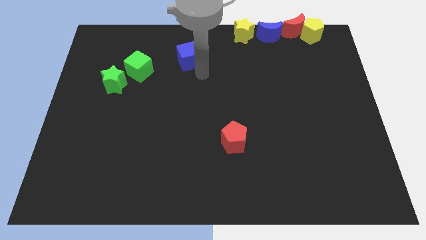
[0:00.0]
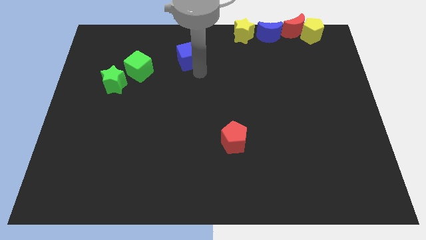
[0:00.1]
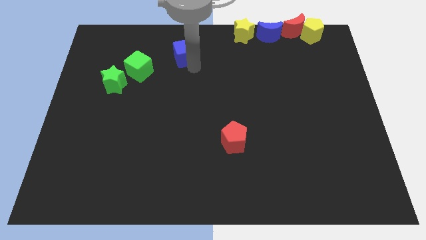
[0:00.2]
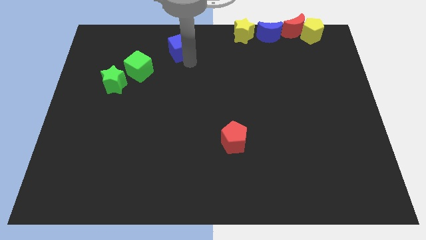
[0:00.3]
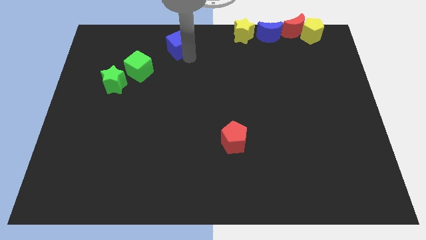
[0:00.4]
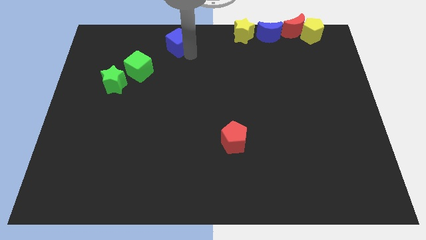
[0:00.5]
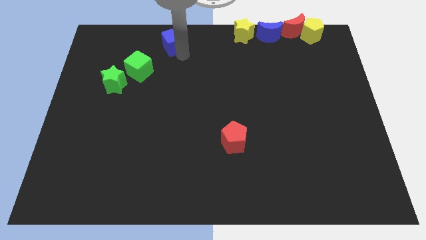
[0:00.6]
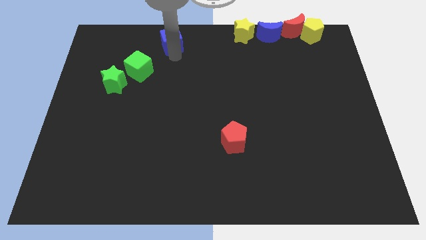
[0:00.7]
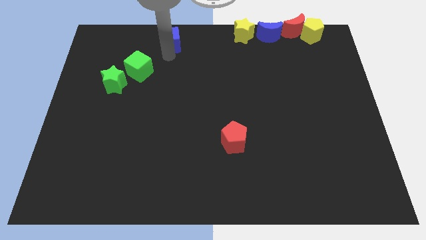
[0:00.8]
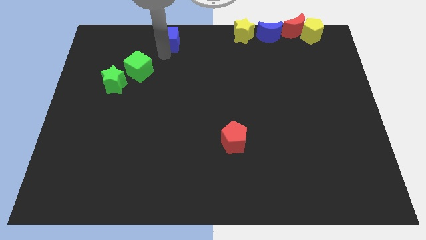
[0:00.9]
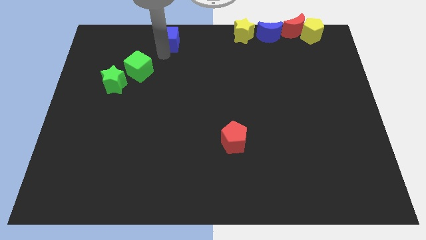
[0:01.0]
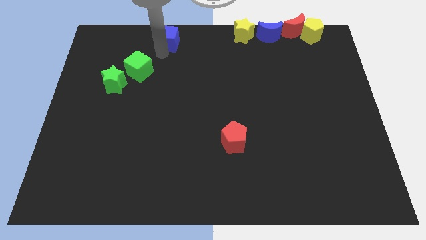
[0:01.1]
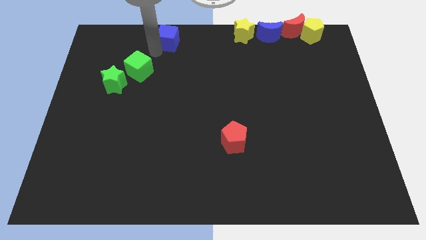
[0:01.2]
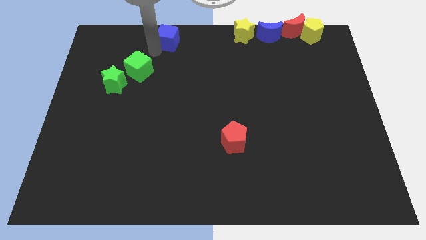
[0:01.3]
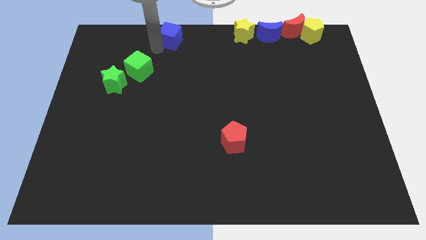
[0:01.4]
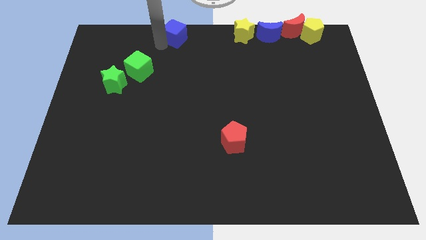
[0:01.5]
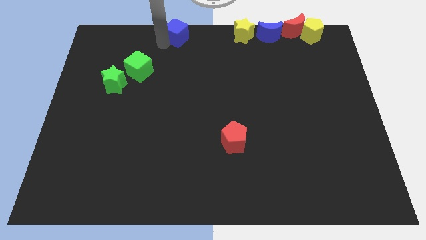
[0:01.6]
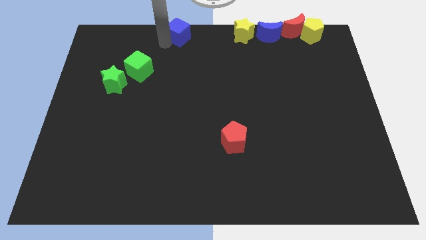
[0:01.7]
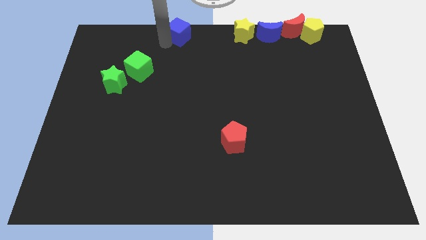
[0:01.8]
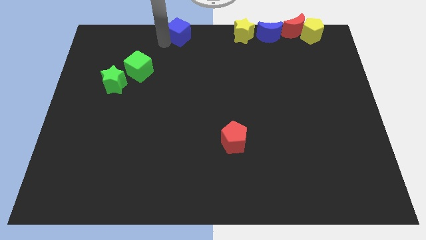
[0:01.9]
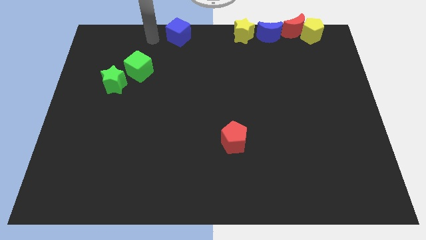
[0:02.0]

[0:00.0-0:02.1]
move the blue cube diagonal to the left of yellow star

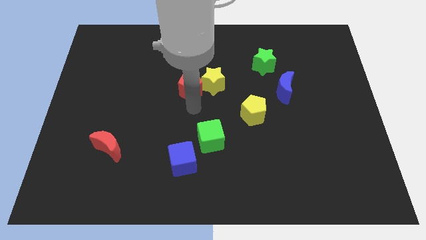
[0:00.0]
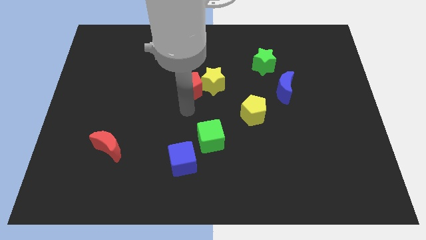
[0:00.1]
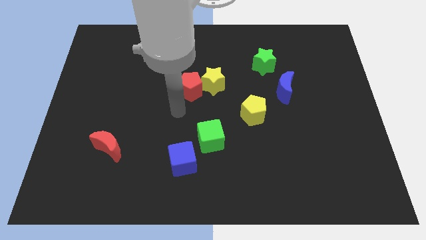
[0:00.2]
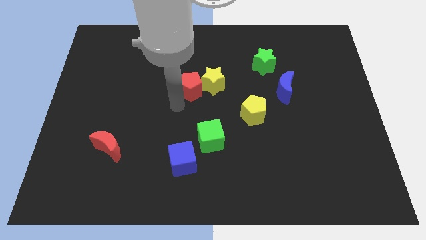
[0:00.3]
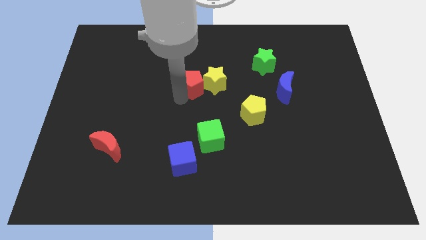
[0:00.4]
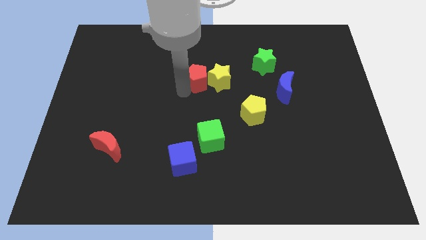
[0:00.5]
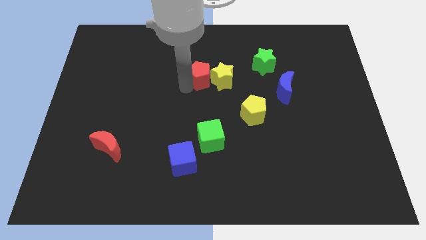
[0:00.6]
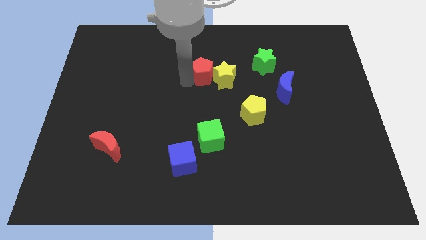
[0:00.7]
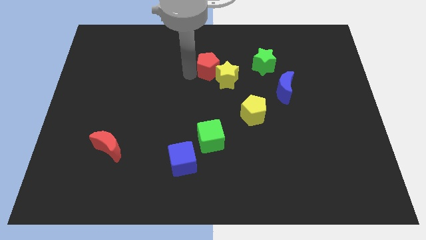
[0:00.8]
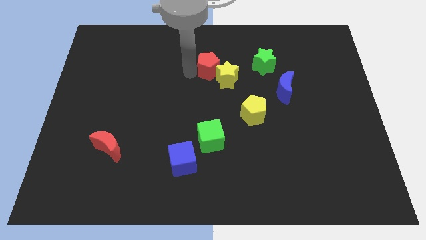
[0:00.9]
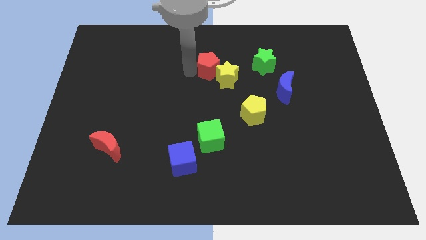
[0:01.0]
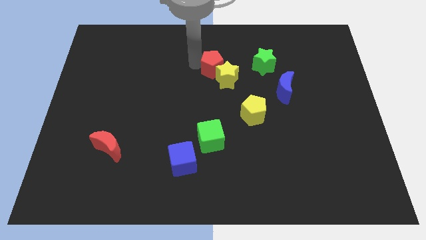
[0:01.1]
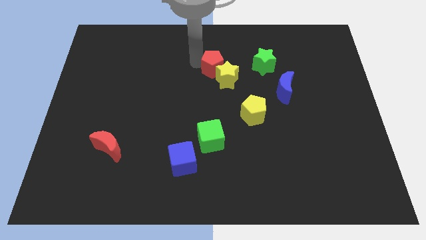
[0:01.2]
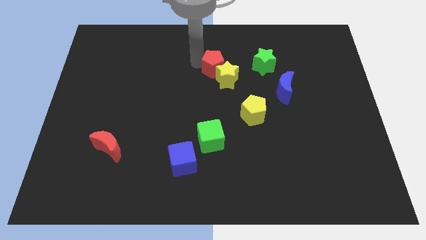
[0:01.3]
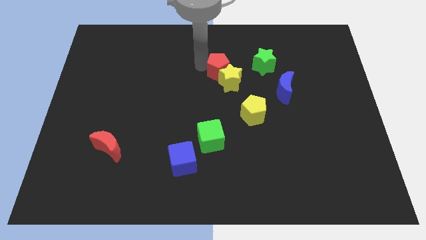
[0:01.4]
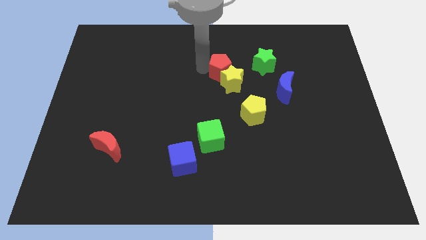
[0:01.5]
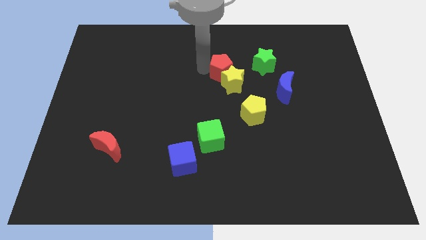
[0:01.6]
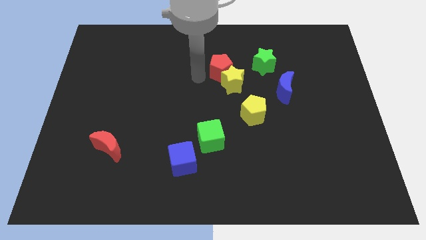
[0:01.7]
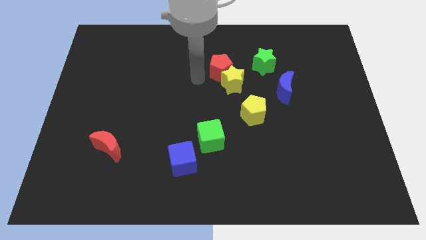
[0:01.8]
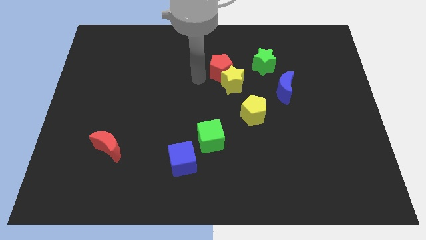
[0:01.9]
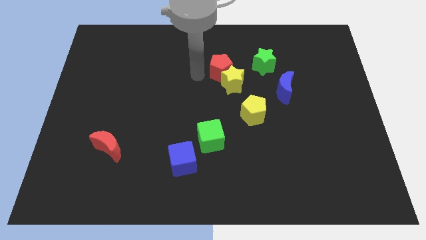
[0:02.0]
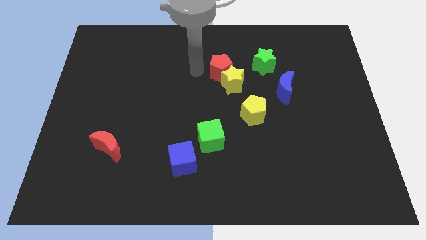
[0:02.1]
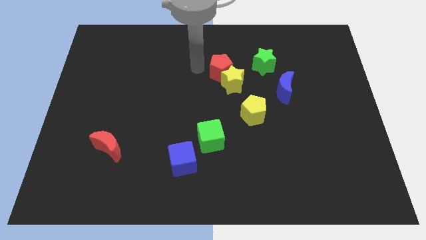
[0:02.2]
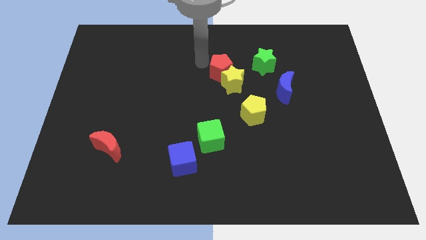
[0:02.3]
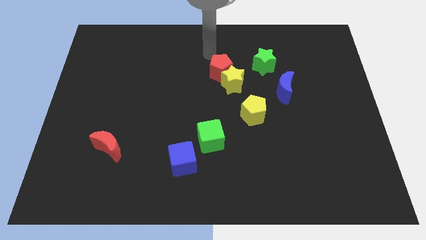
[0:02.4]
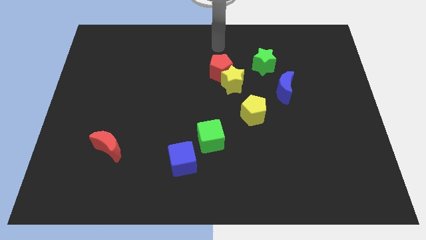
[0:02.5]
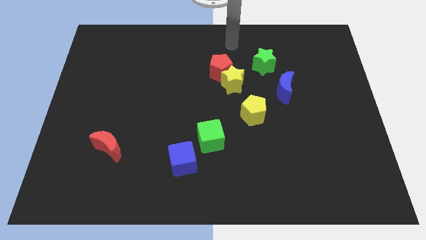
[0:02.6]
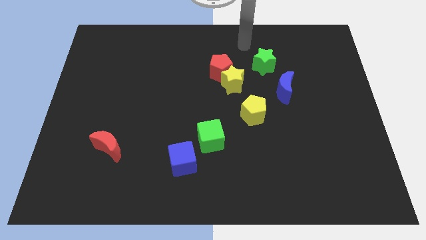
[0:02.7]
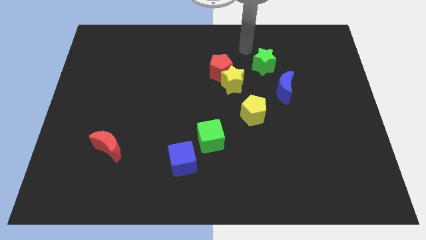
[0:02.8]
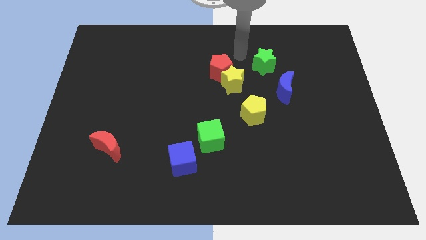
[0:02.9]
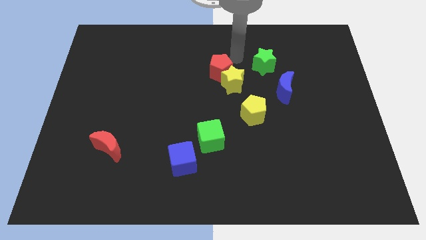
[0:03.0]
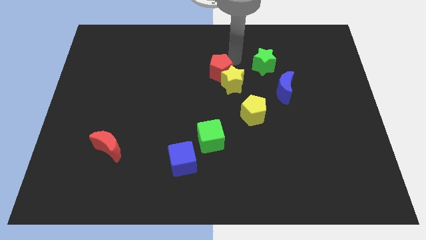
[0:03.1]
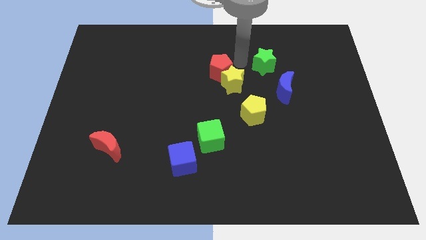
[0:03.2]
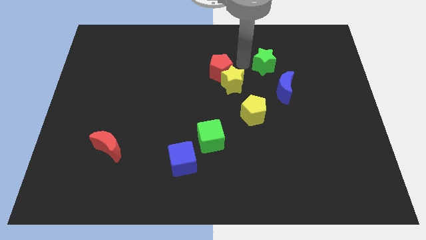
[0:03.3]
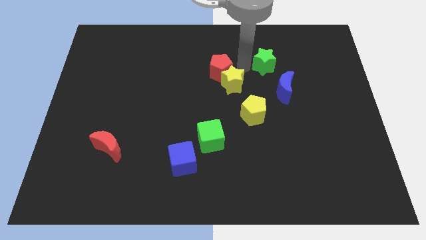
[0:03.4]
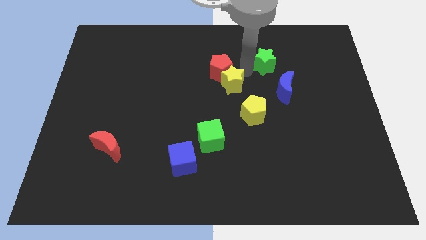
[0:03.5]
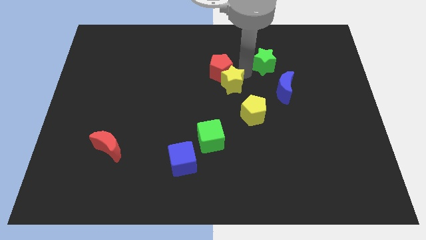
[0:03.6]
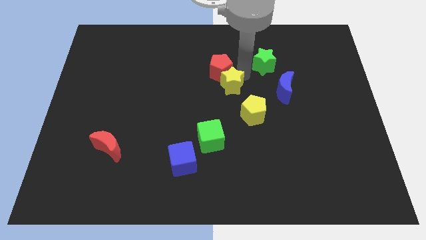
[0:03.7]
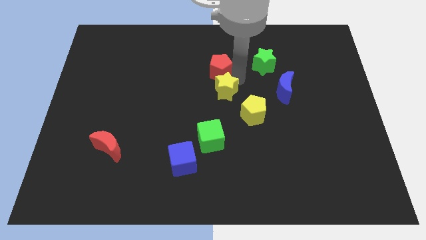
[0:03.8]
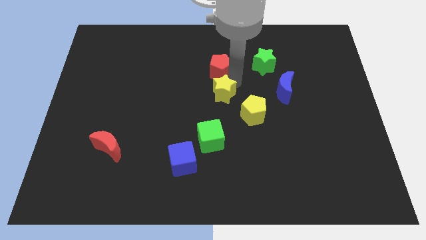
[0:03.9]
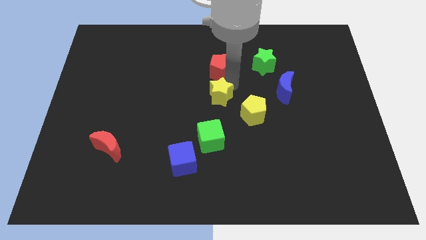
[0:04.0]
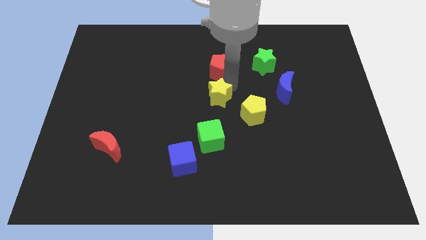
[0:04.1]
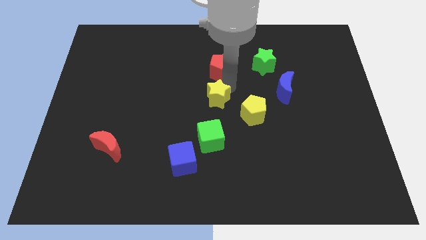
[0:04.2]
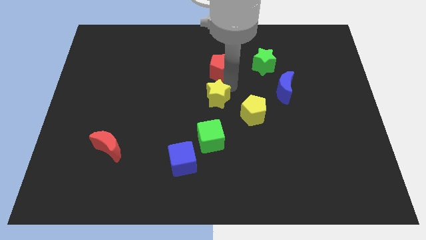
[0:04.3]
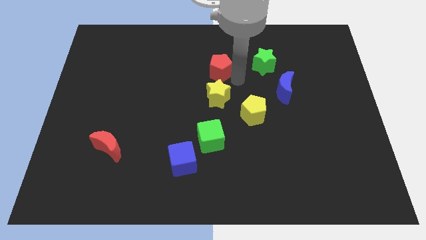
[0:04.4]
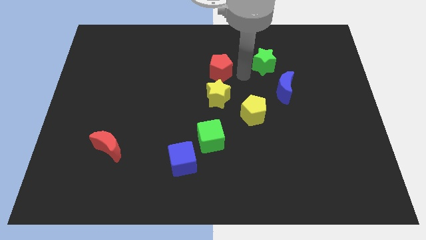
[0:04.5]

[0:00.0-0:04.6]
push the red pentagon into the yellow star

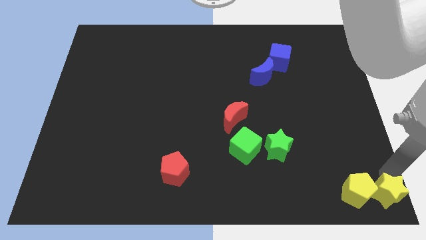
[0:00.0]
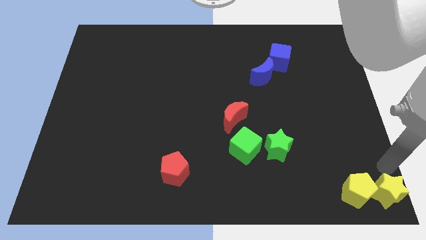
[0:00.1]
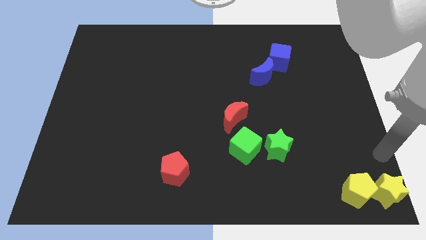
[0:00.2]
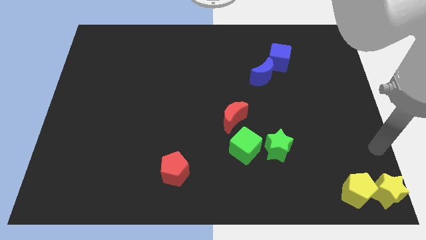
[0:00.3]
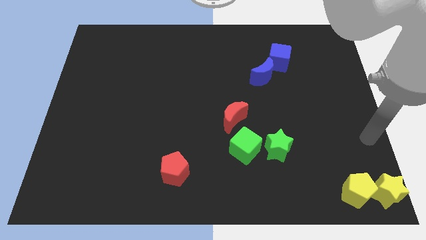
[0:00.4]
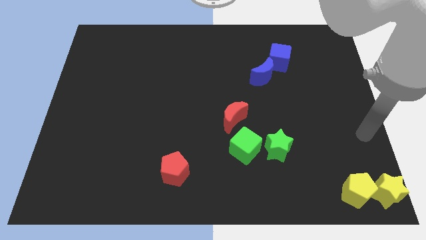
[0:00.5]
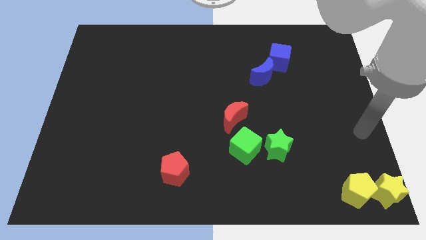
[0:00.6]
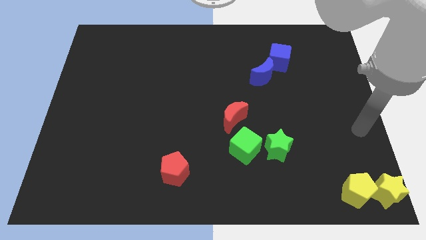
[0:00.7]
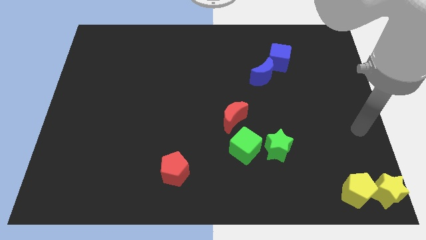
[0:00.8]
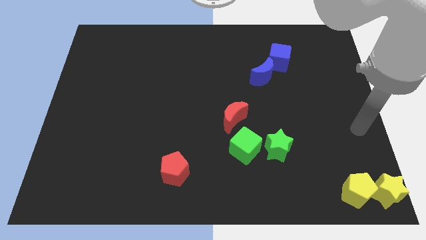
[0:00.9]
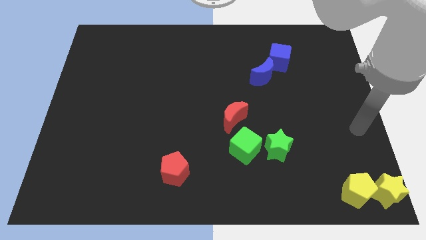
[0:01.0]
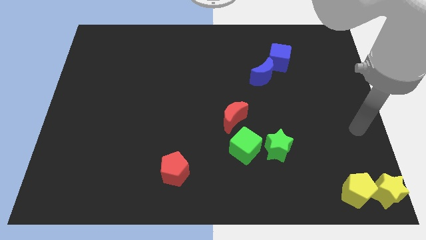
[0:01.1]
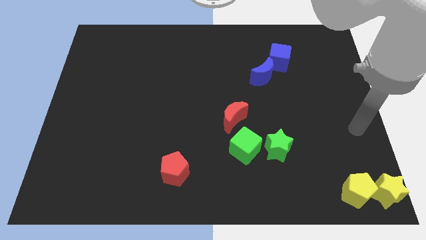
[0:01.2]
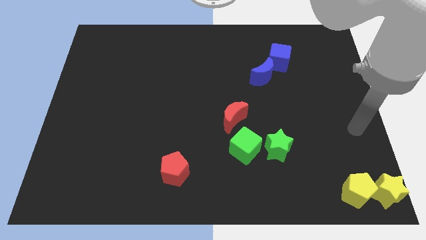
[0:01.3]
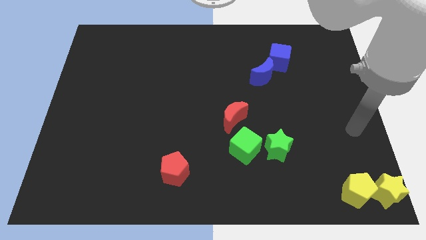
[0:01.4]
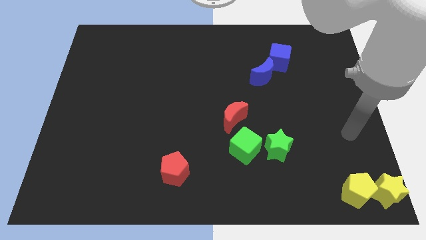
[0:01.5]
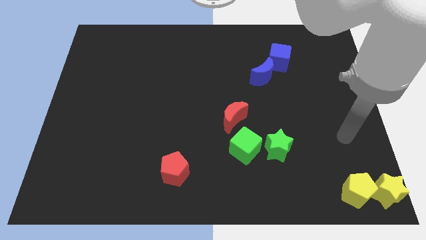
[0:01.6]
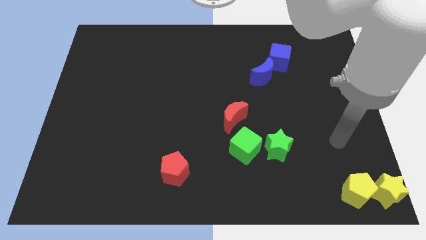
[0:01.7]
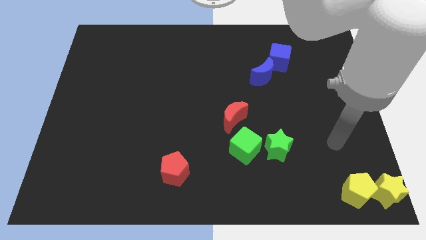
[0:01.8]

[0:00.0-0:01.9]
move the arm away from the yellow star

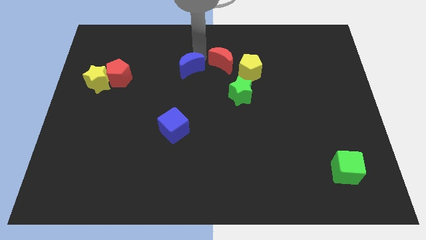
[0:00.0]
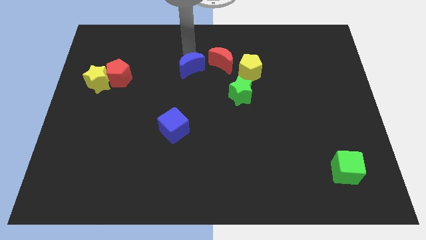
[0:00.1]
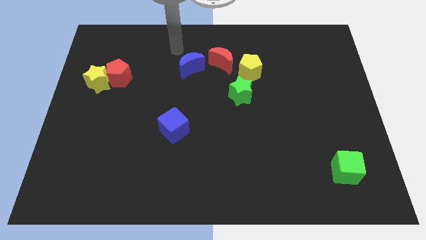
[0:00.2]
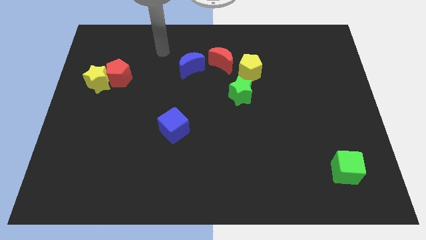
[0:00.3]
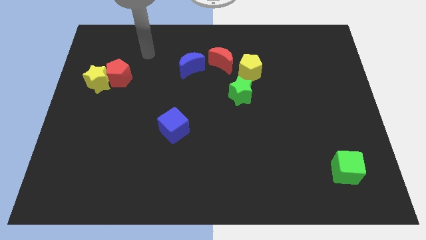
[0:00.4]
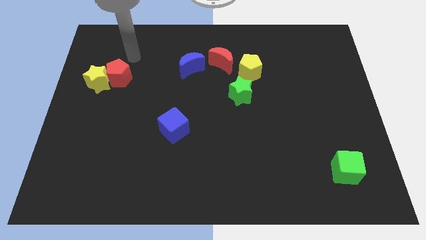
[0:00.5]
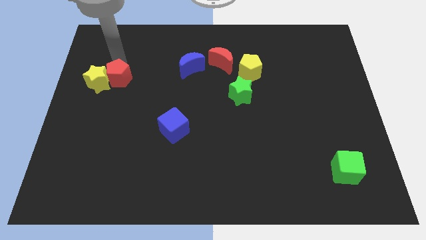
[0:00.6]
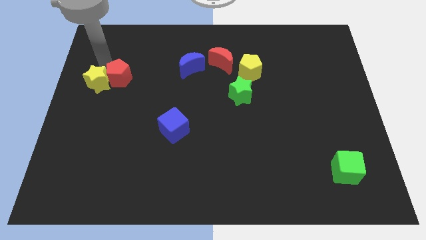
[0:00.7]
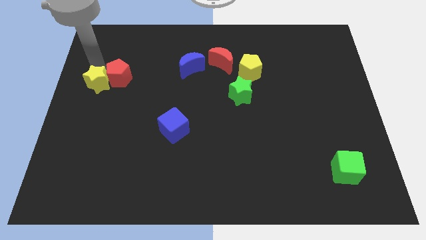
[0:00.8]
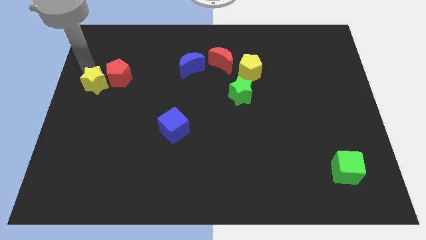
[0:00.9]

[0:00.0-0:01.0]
move your arm to the top side of the yellow star
